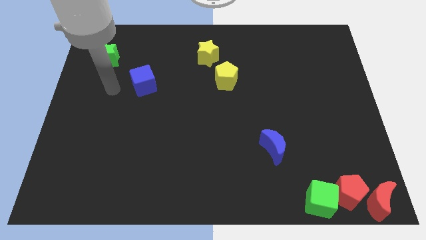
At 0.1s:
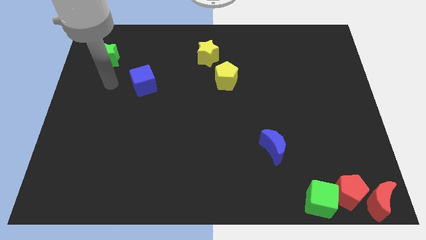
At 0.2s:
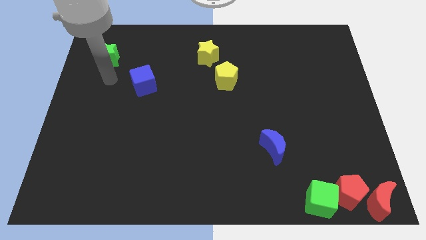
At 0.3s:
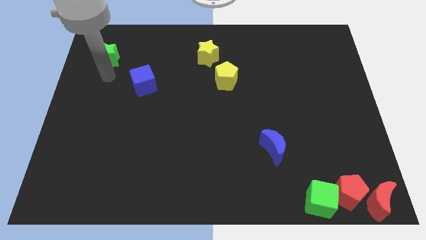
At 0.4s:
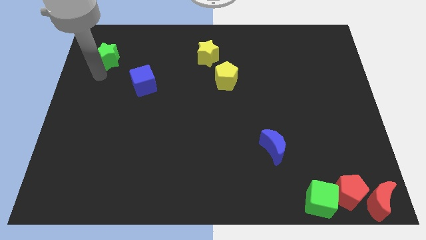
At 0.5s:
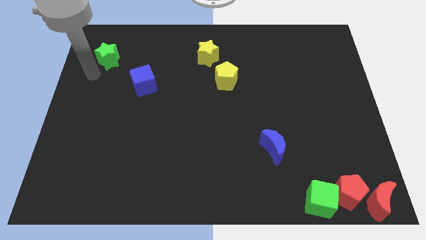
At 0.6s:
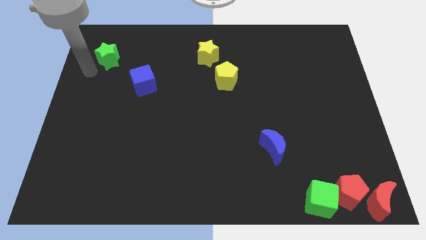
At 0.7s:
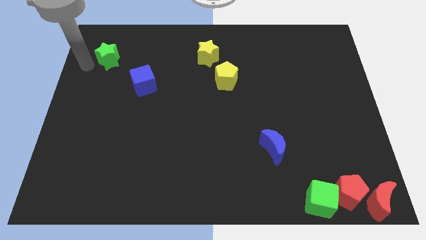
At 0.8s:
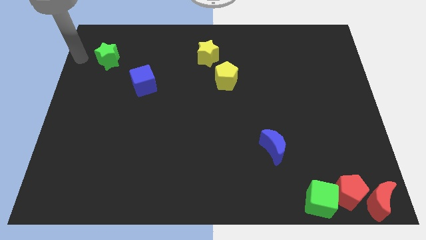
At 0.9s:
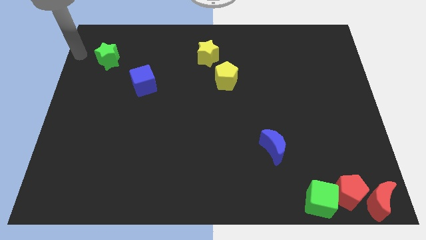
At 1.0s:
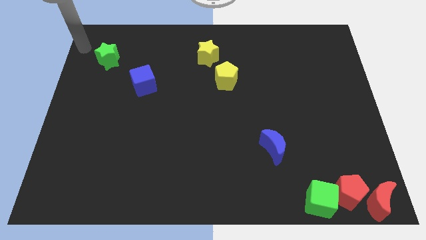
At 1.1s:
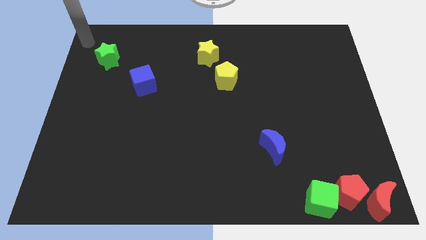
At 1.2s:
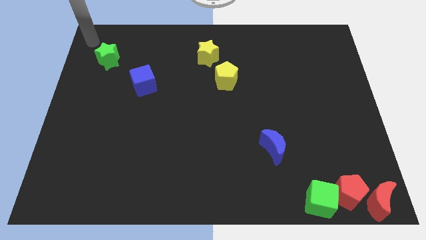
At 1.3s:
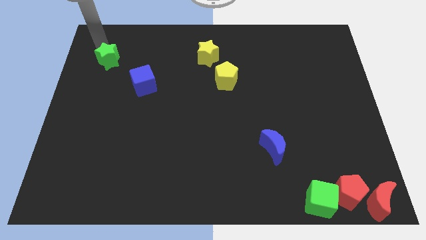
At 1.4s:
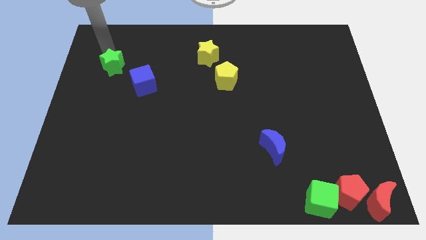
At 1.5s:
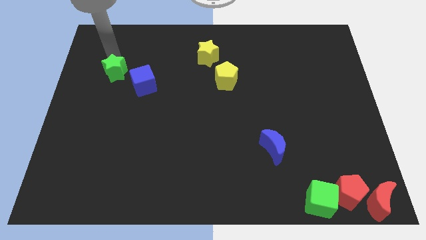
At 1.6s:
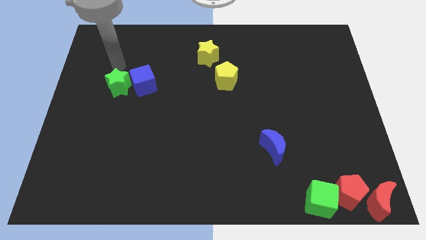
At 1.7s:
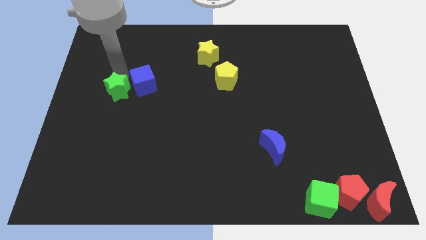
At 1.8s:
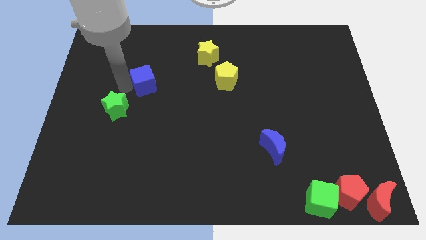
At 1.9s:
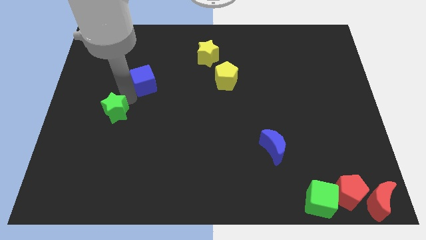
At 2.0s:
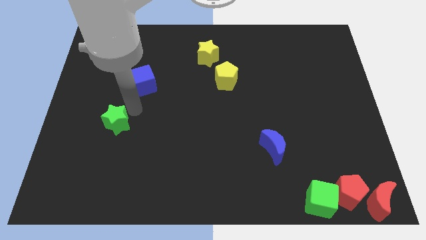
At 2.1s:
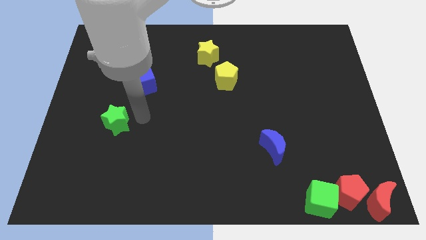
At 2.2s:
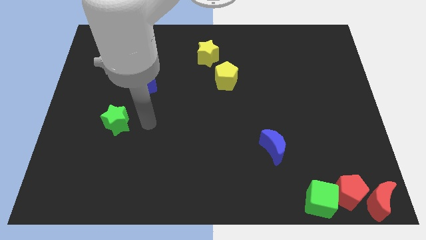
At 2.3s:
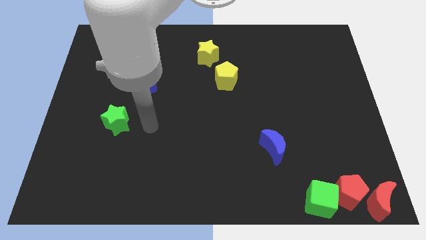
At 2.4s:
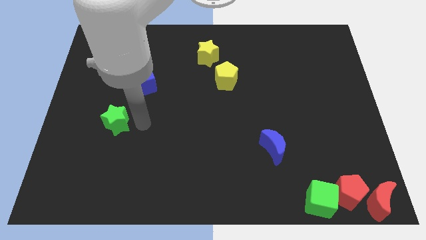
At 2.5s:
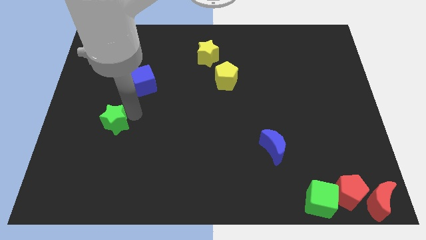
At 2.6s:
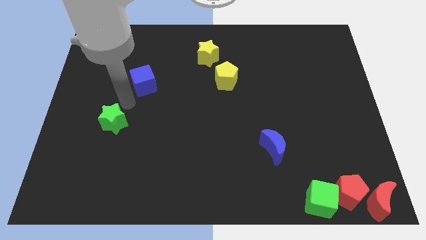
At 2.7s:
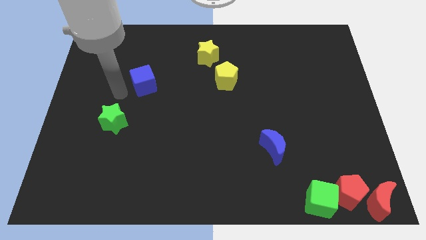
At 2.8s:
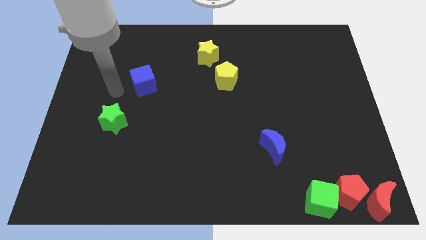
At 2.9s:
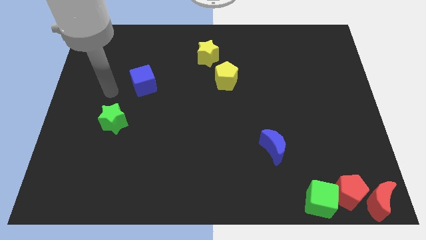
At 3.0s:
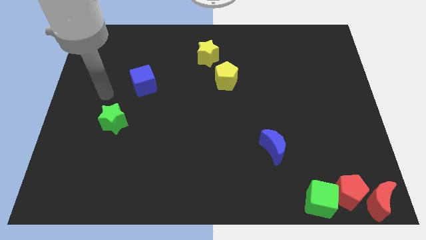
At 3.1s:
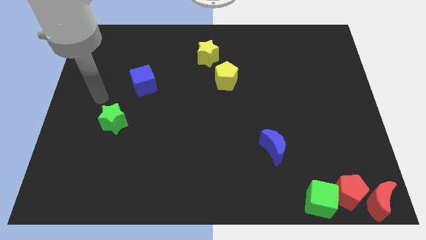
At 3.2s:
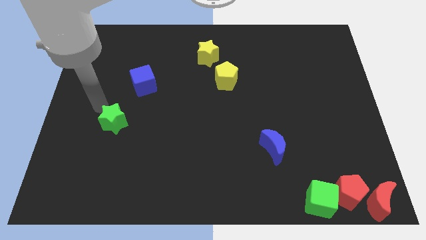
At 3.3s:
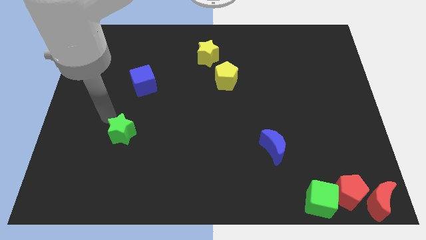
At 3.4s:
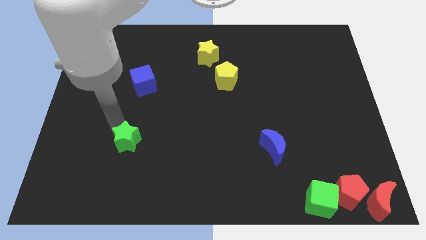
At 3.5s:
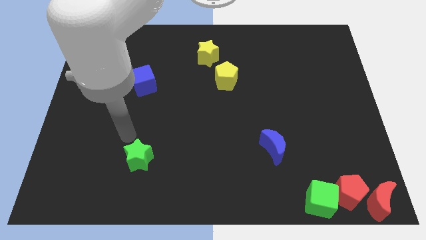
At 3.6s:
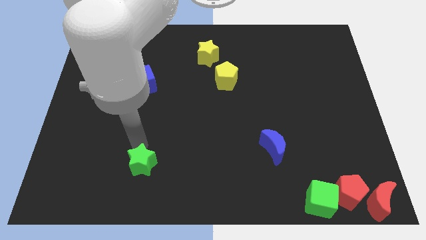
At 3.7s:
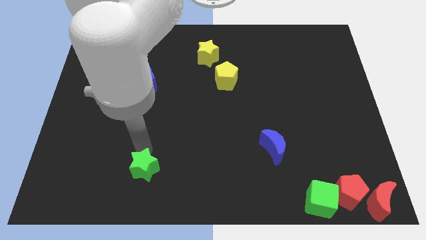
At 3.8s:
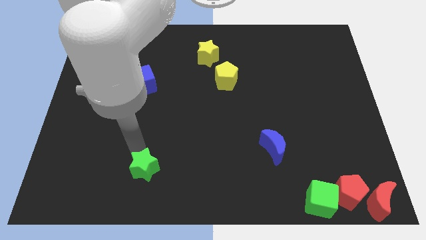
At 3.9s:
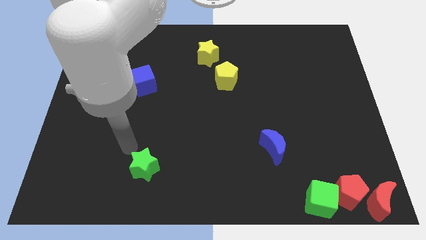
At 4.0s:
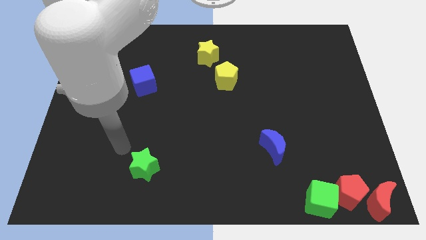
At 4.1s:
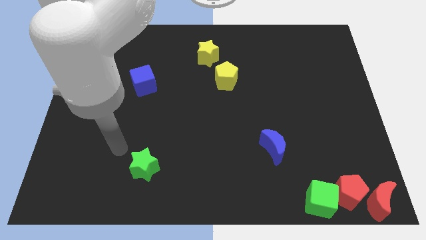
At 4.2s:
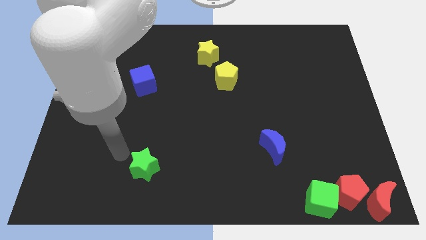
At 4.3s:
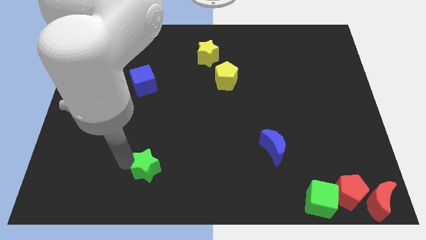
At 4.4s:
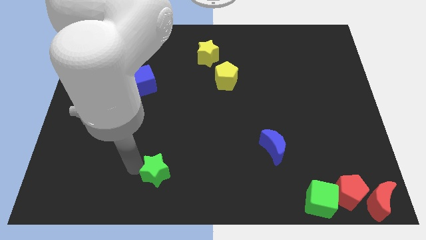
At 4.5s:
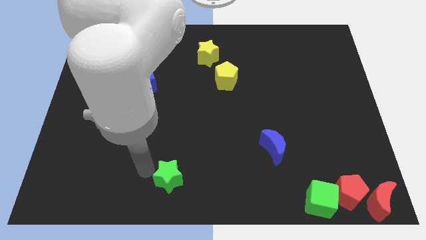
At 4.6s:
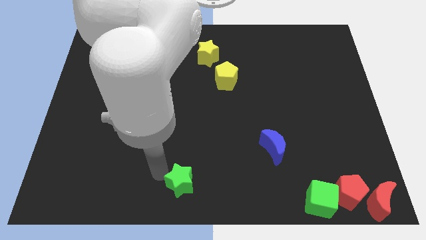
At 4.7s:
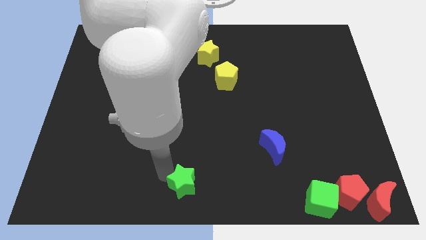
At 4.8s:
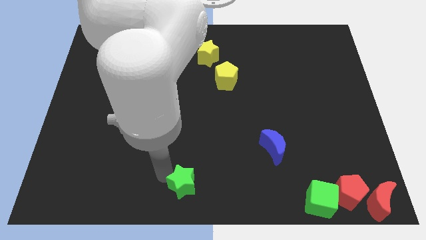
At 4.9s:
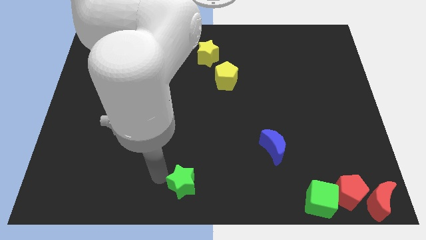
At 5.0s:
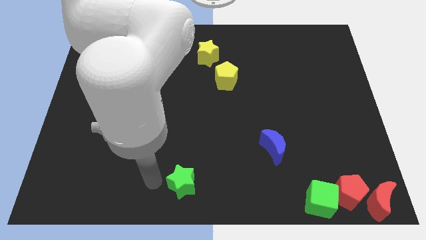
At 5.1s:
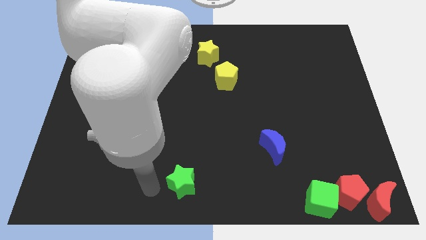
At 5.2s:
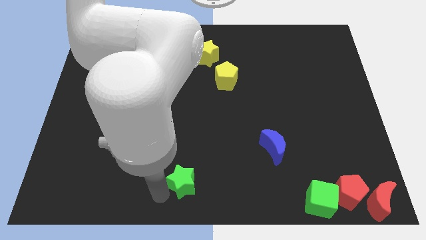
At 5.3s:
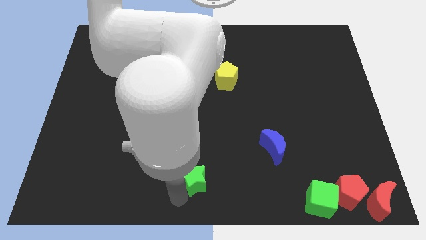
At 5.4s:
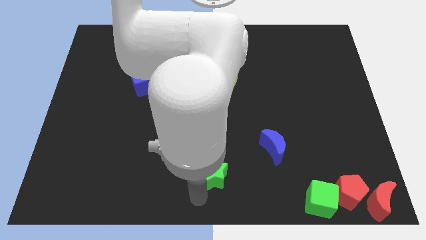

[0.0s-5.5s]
move the green star to the bottom center

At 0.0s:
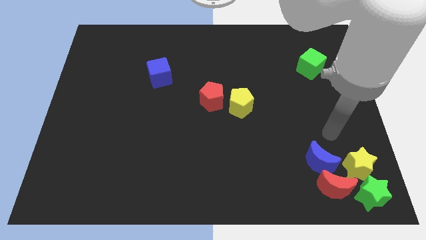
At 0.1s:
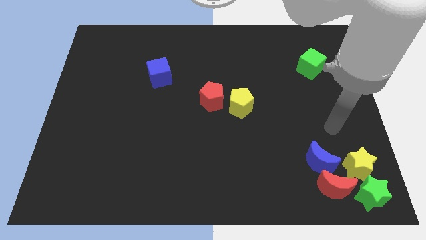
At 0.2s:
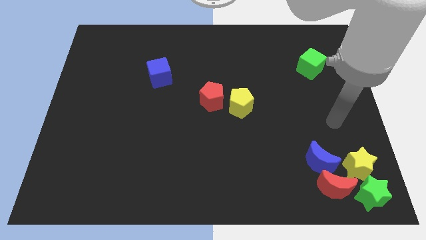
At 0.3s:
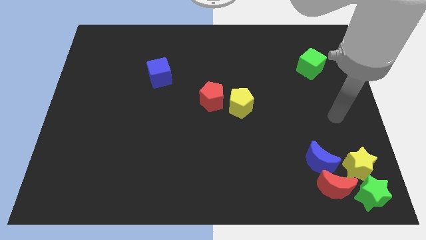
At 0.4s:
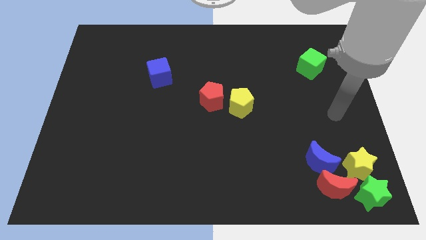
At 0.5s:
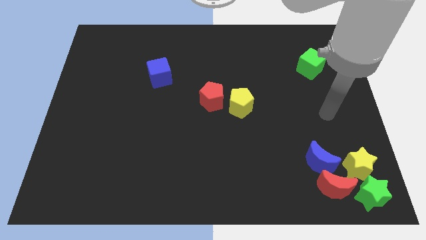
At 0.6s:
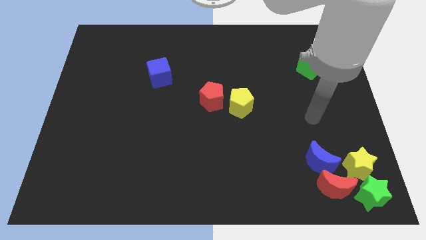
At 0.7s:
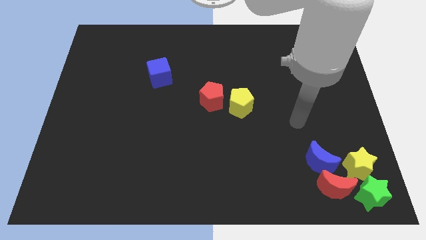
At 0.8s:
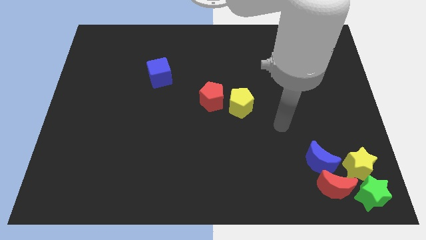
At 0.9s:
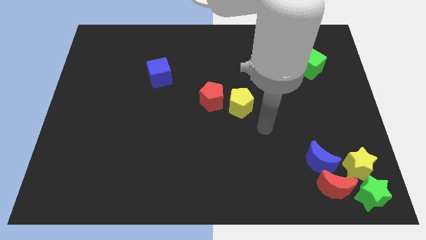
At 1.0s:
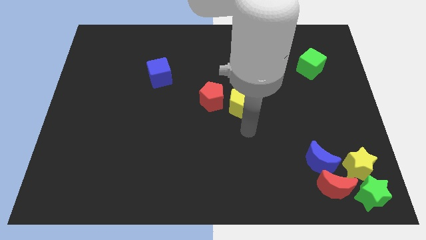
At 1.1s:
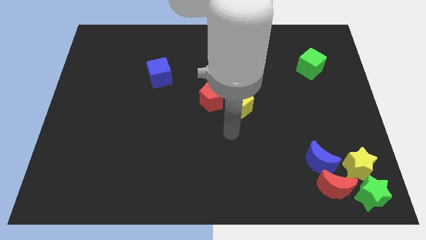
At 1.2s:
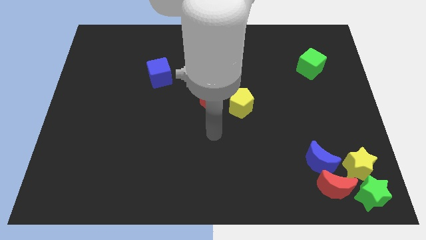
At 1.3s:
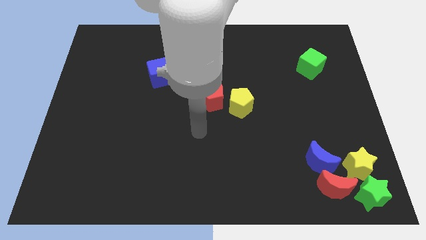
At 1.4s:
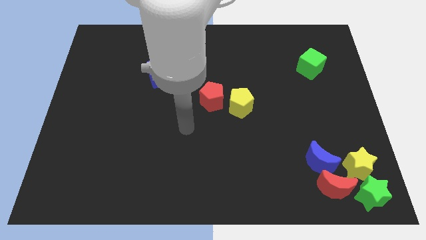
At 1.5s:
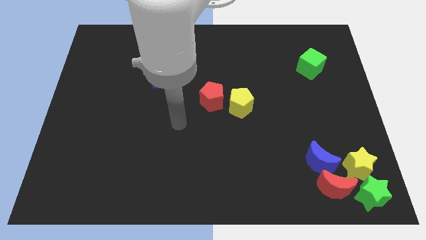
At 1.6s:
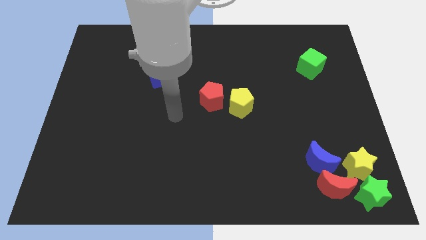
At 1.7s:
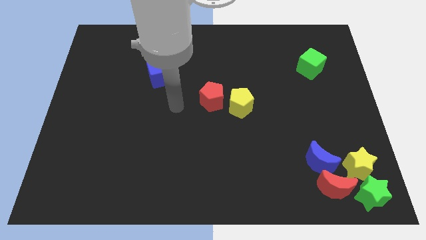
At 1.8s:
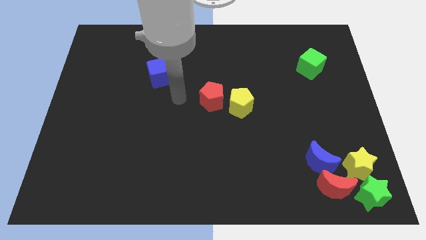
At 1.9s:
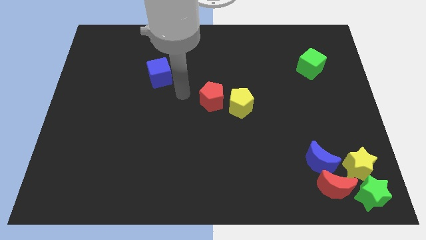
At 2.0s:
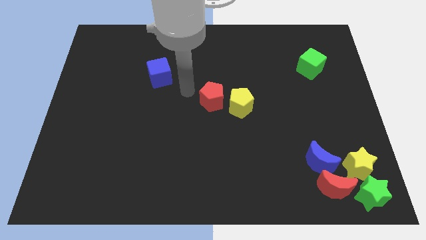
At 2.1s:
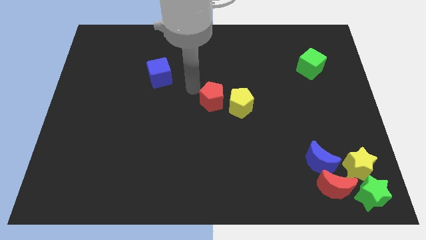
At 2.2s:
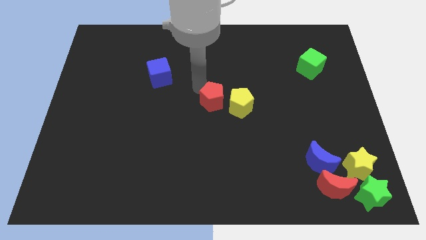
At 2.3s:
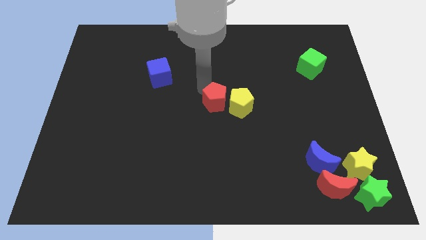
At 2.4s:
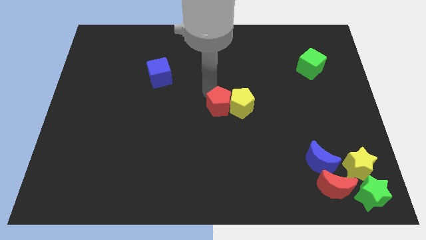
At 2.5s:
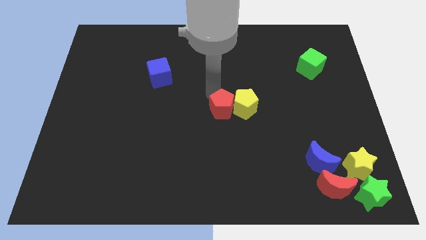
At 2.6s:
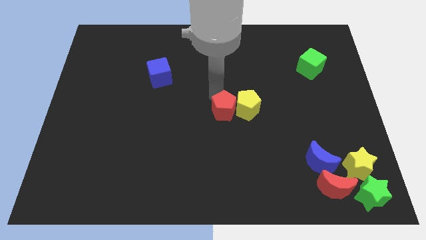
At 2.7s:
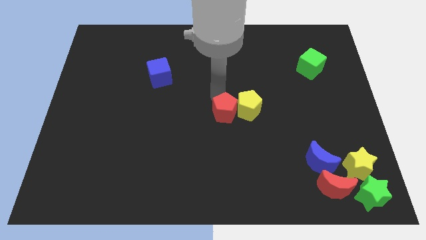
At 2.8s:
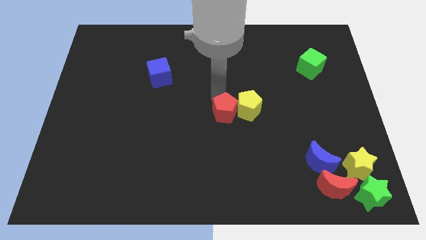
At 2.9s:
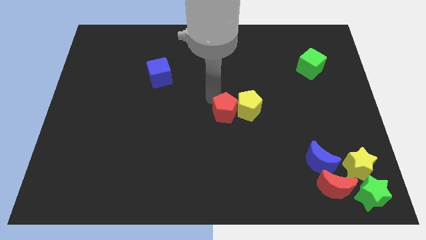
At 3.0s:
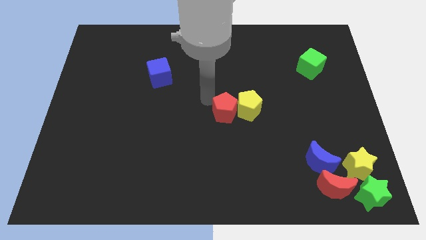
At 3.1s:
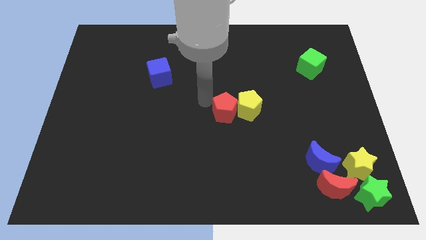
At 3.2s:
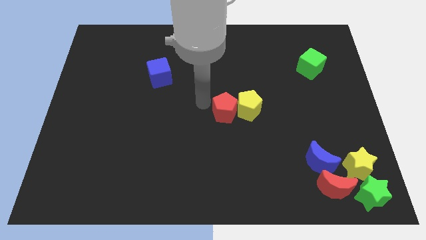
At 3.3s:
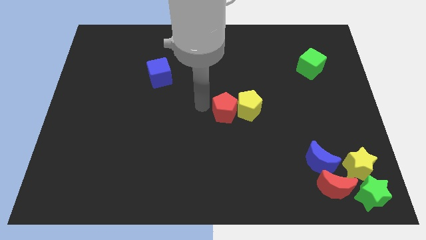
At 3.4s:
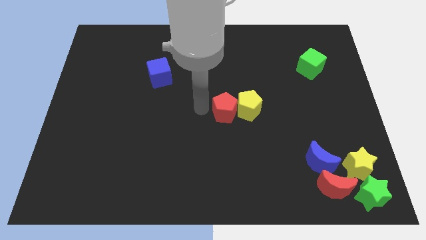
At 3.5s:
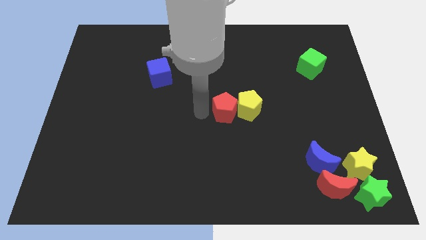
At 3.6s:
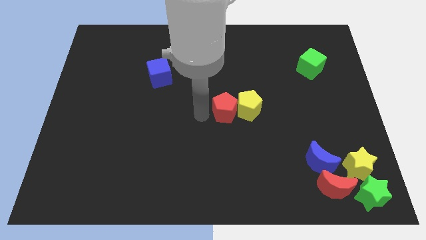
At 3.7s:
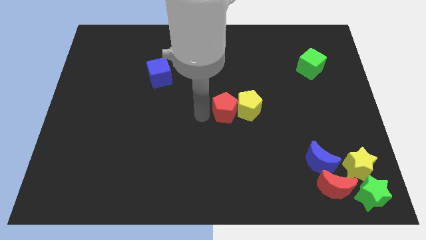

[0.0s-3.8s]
push the red pentagon into yellow pentagon
